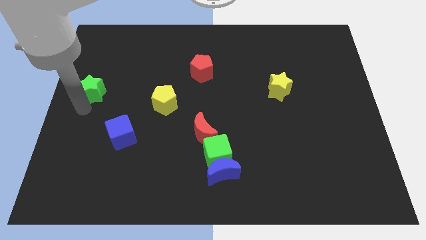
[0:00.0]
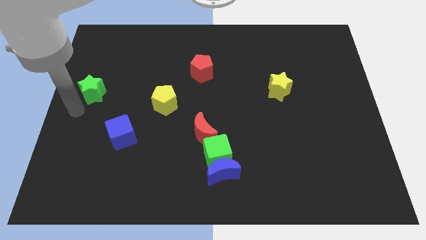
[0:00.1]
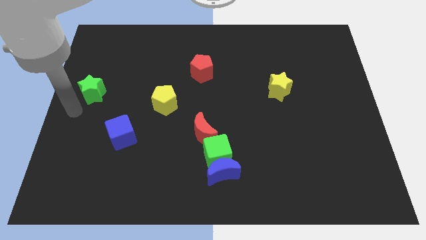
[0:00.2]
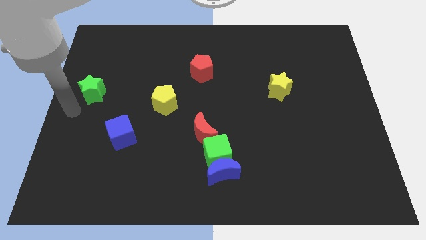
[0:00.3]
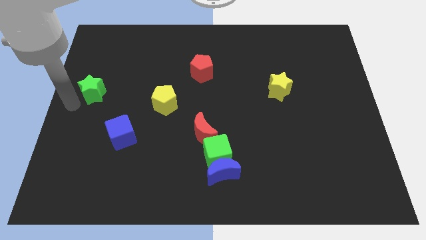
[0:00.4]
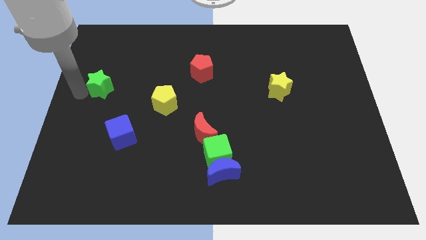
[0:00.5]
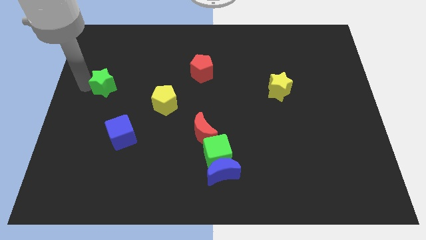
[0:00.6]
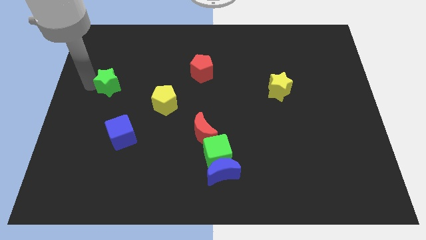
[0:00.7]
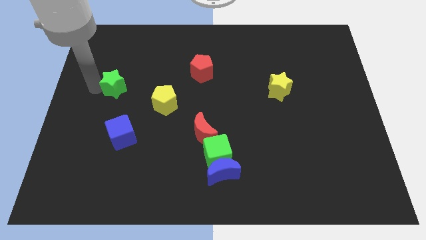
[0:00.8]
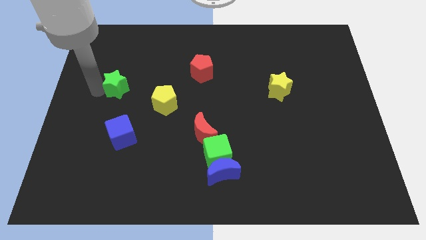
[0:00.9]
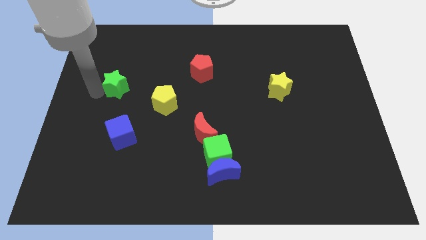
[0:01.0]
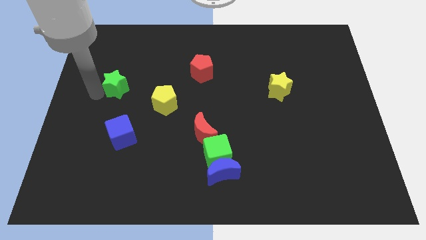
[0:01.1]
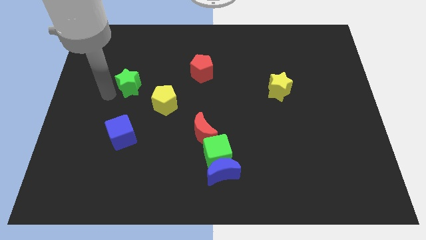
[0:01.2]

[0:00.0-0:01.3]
put the green star above the blue cube

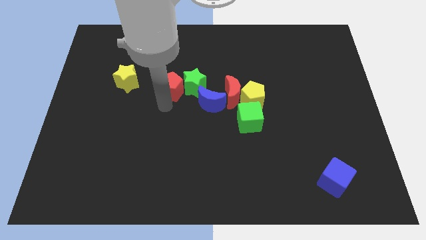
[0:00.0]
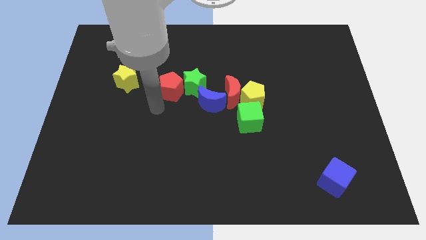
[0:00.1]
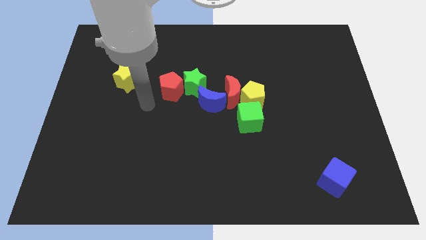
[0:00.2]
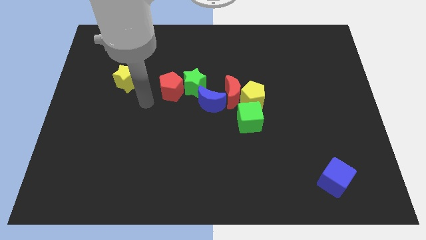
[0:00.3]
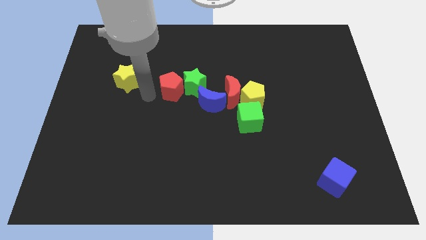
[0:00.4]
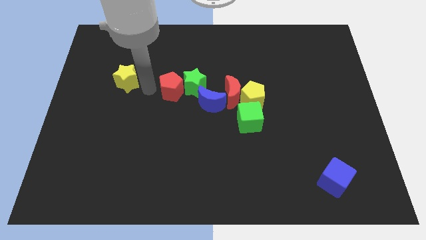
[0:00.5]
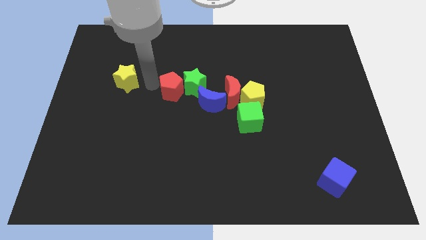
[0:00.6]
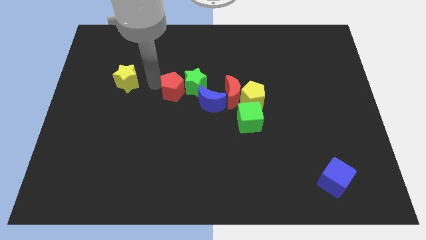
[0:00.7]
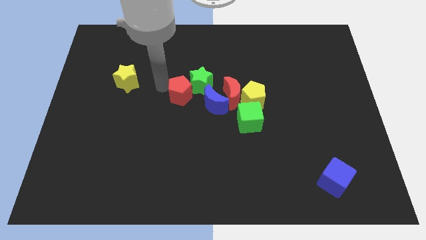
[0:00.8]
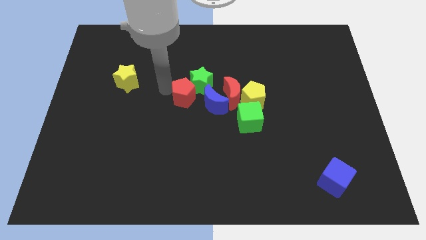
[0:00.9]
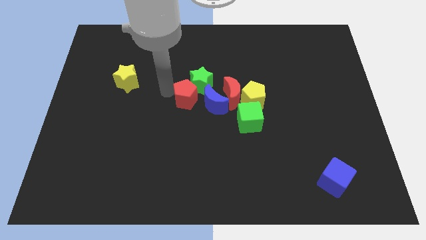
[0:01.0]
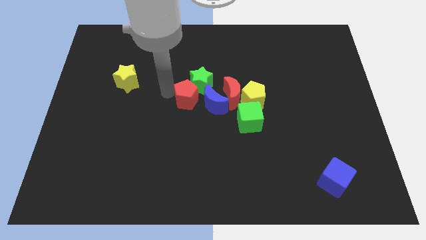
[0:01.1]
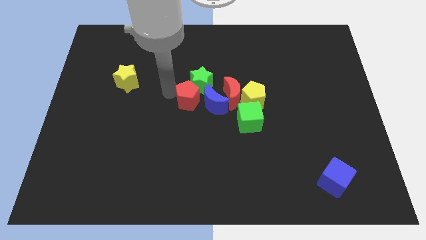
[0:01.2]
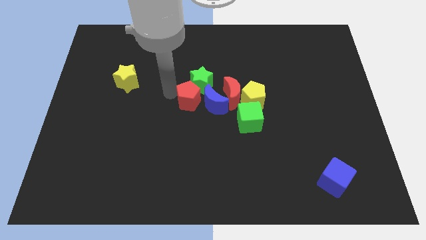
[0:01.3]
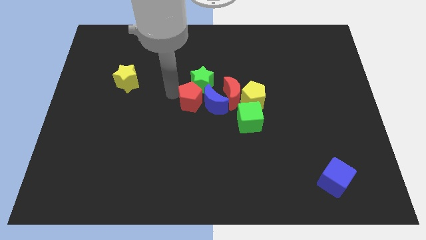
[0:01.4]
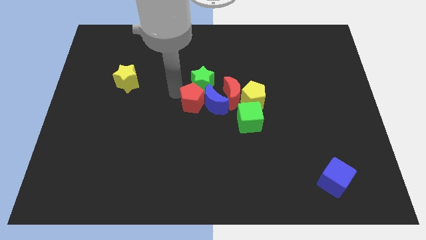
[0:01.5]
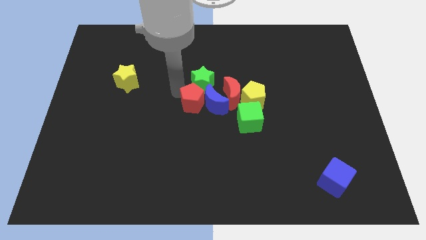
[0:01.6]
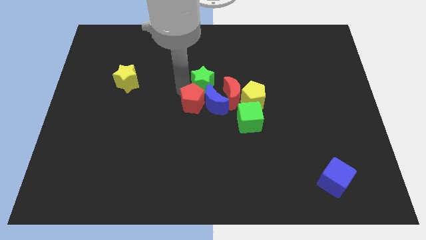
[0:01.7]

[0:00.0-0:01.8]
move the red pentagon to the bottom of the green star

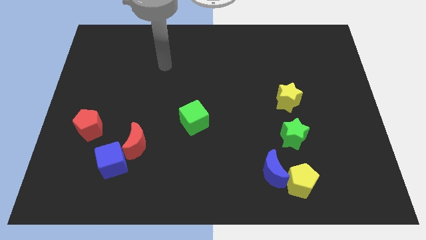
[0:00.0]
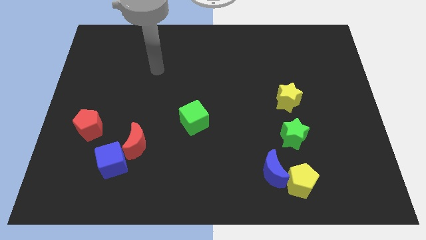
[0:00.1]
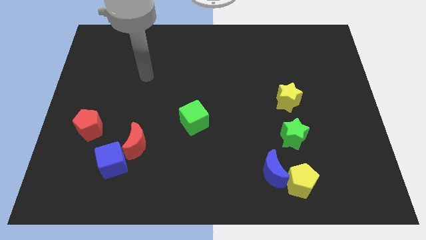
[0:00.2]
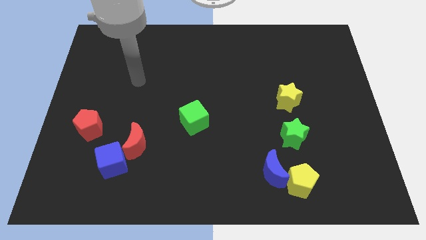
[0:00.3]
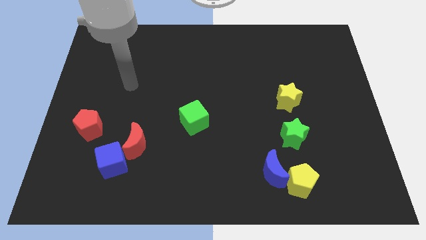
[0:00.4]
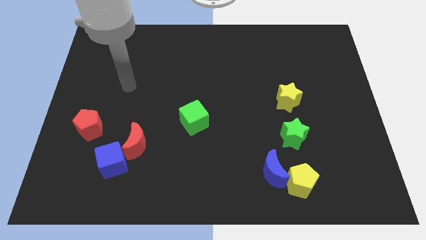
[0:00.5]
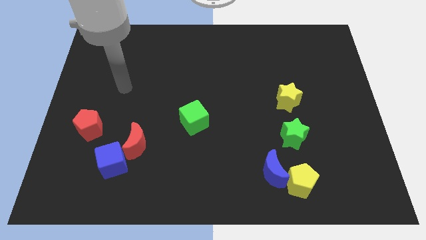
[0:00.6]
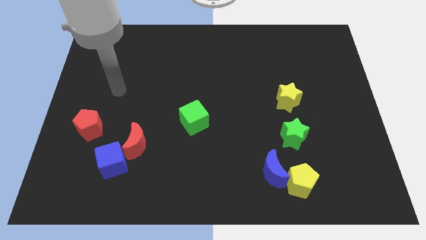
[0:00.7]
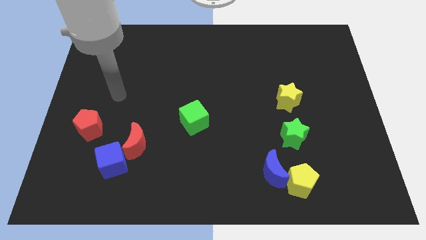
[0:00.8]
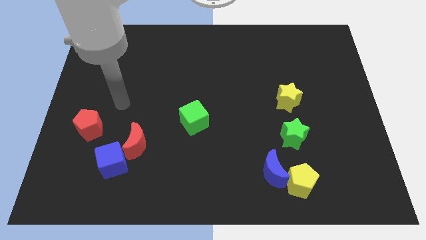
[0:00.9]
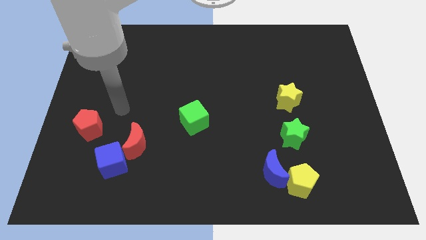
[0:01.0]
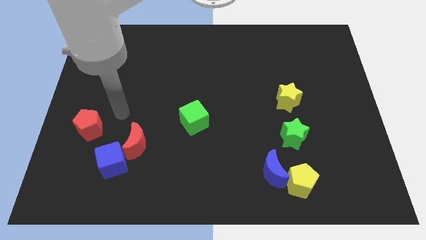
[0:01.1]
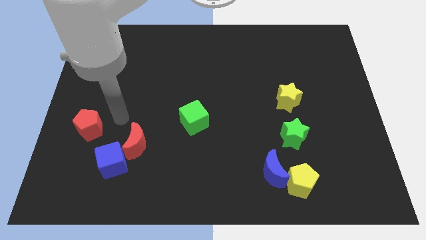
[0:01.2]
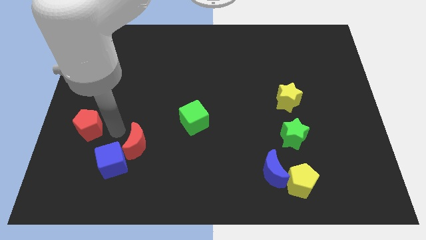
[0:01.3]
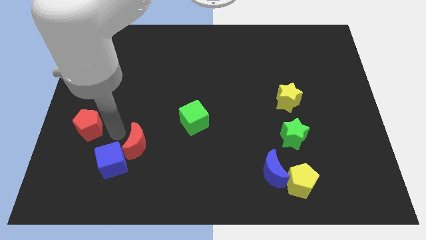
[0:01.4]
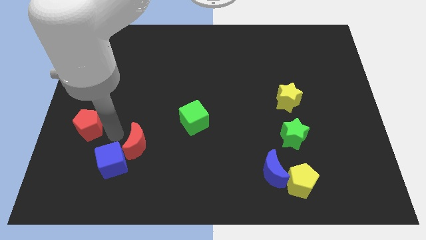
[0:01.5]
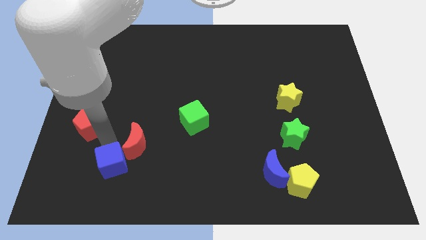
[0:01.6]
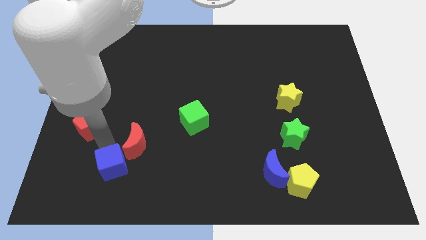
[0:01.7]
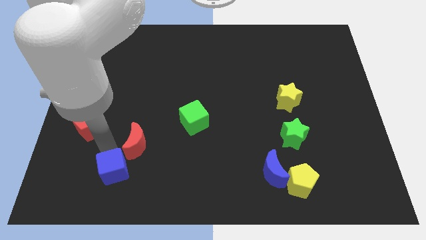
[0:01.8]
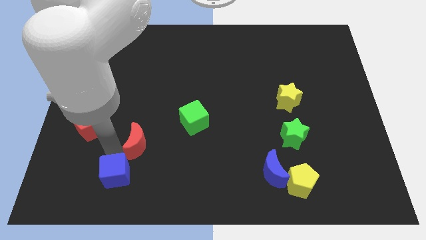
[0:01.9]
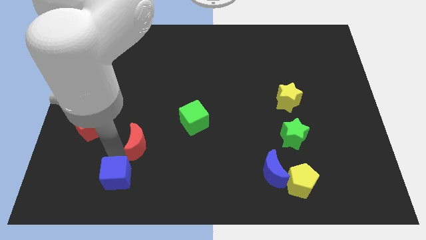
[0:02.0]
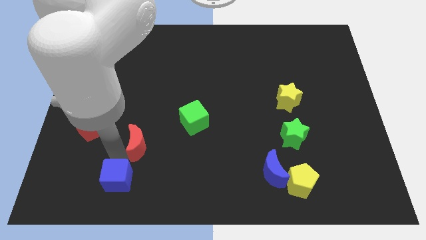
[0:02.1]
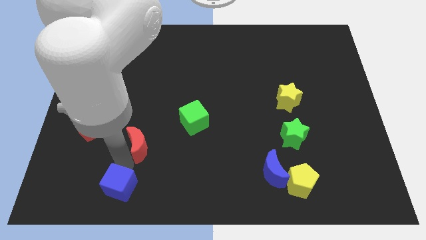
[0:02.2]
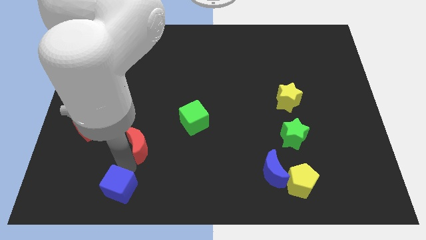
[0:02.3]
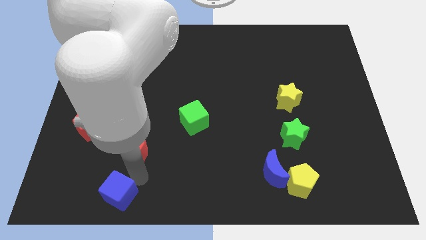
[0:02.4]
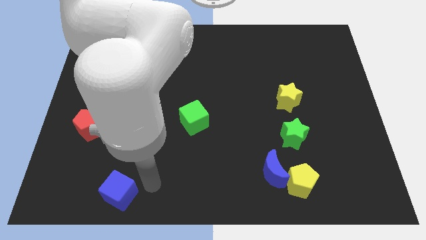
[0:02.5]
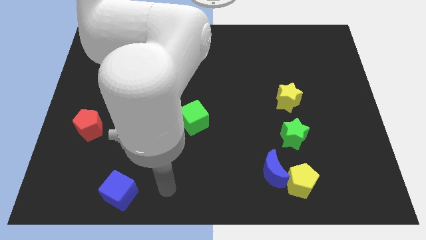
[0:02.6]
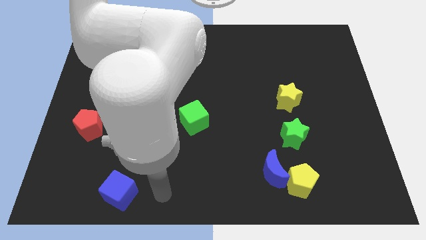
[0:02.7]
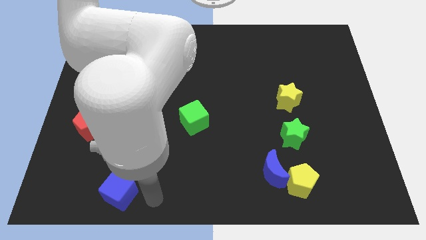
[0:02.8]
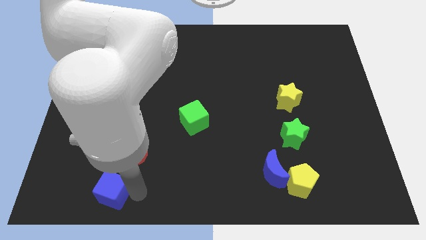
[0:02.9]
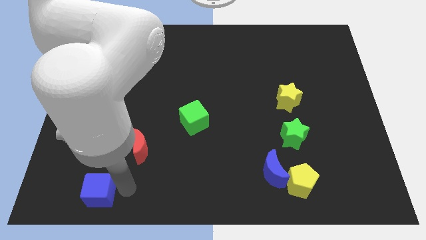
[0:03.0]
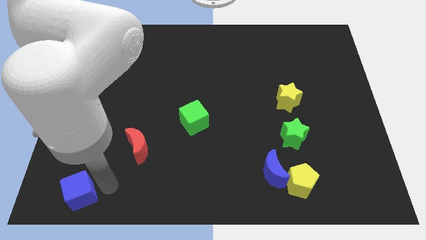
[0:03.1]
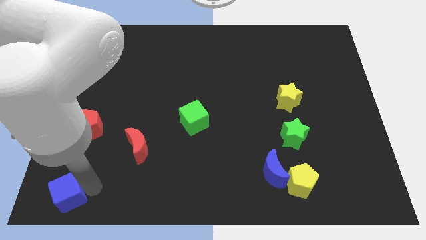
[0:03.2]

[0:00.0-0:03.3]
push the blue cube slightly to the left

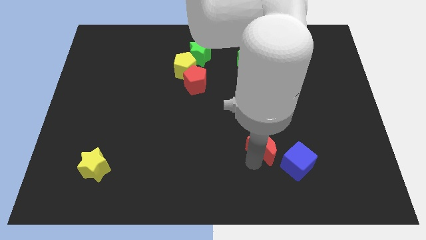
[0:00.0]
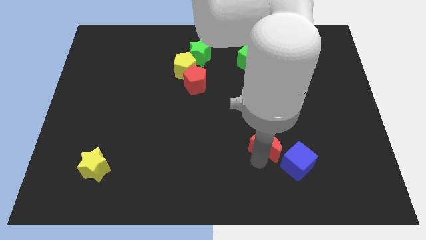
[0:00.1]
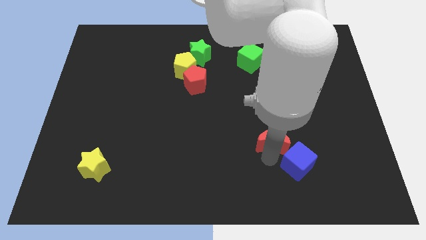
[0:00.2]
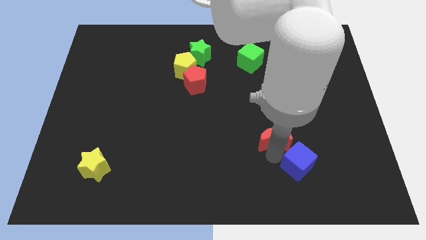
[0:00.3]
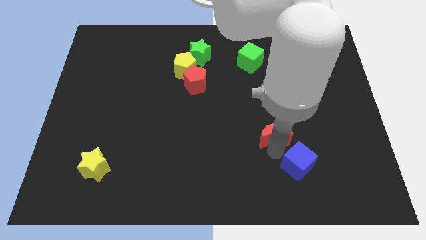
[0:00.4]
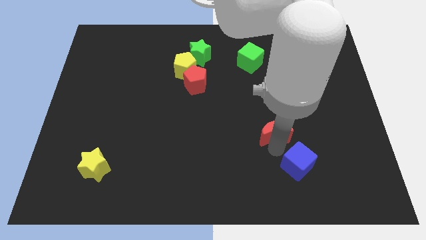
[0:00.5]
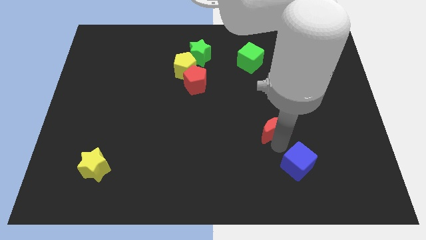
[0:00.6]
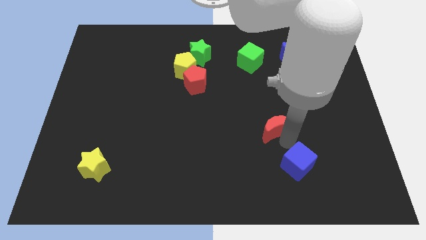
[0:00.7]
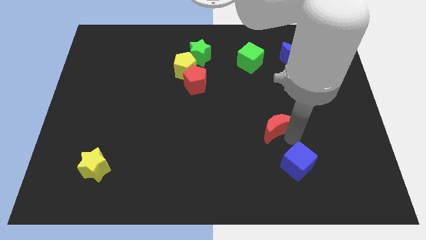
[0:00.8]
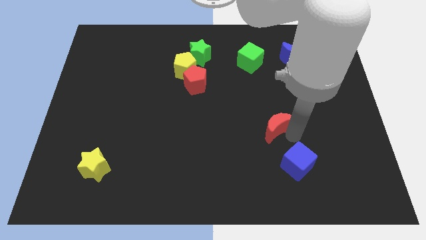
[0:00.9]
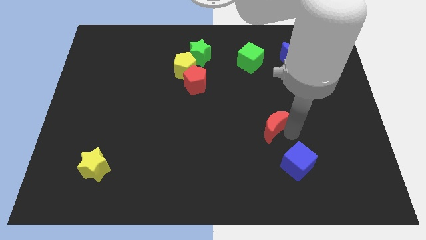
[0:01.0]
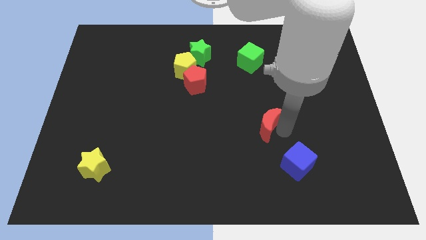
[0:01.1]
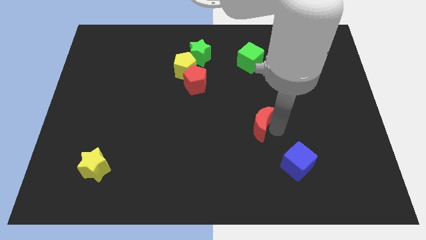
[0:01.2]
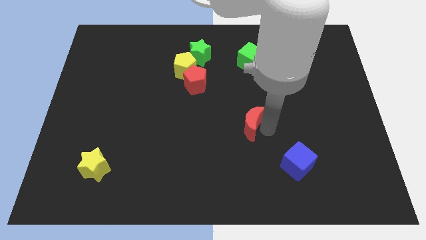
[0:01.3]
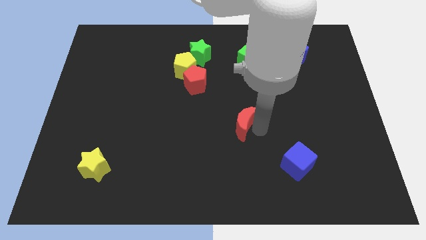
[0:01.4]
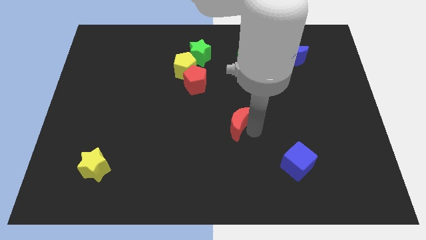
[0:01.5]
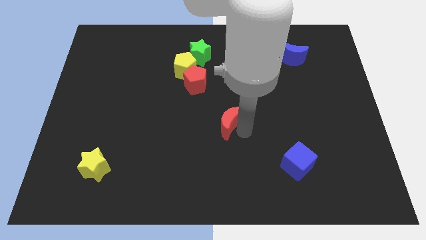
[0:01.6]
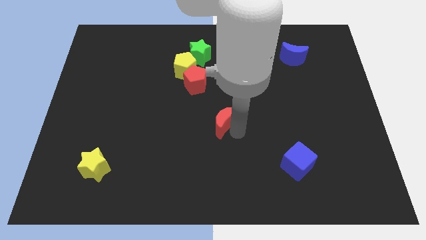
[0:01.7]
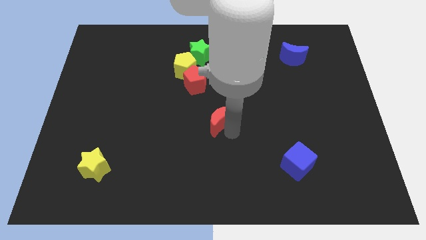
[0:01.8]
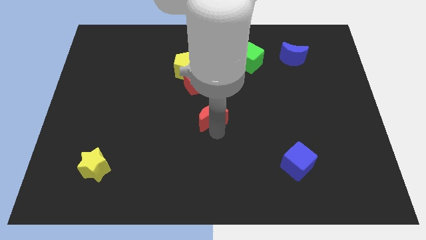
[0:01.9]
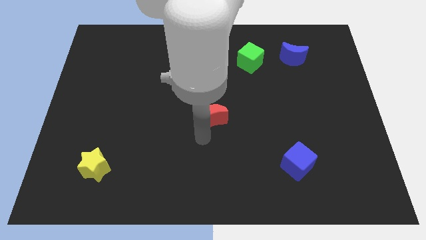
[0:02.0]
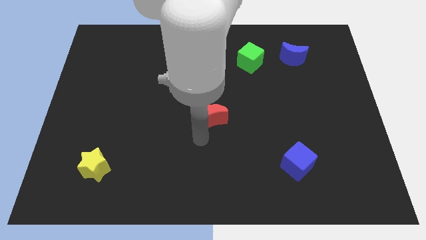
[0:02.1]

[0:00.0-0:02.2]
push the red crescent to the center of the board

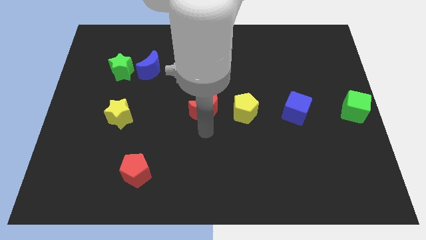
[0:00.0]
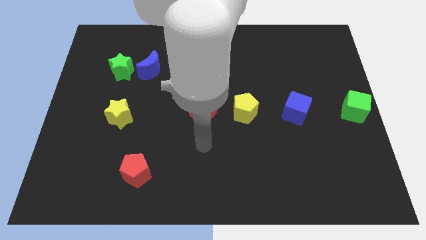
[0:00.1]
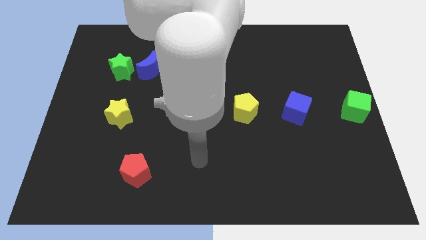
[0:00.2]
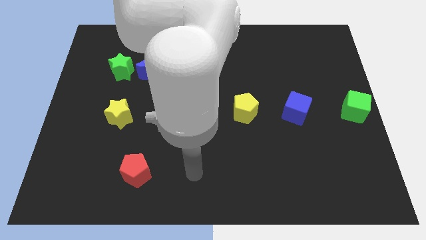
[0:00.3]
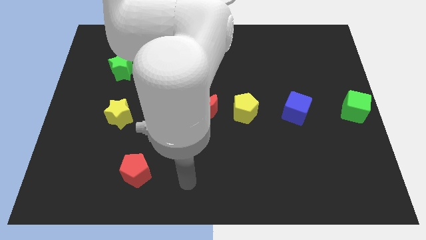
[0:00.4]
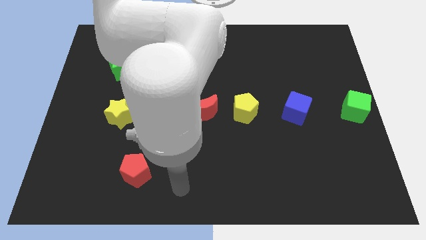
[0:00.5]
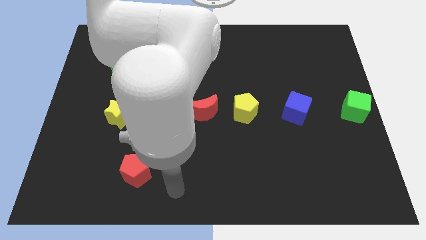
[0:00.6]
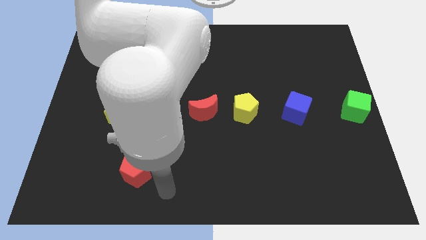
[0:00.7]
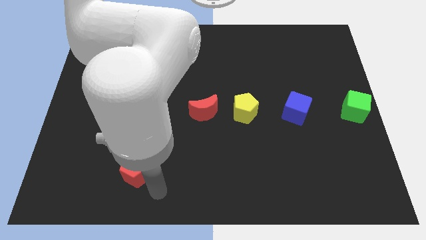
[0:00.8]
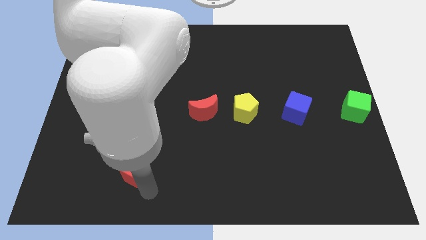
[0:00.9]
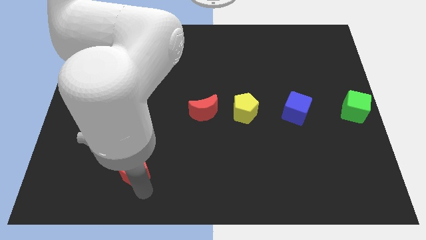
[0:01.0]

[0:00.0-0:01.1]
move your arm away from the red crescent
